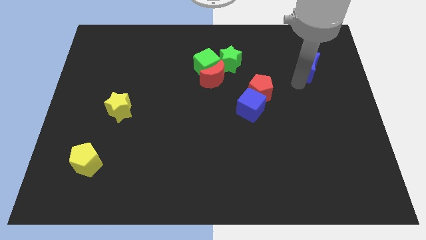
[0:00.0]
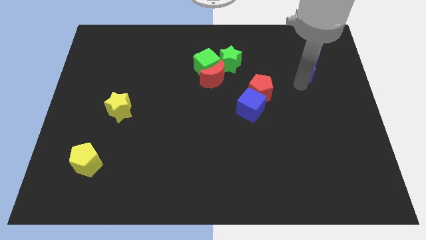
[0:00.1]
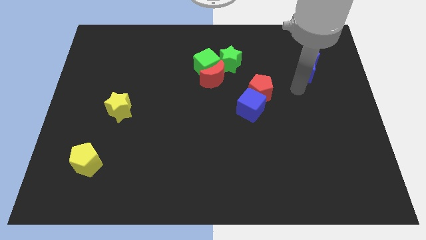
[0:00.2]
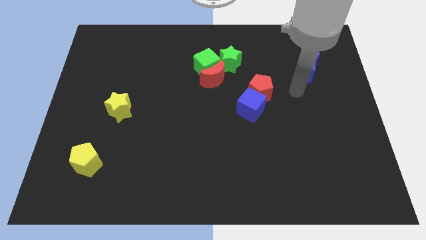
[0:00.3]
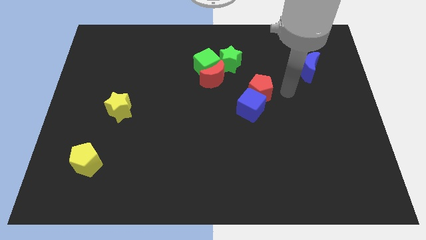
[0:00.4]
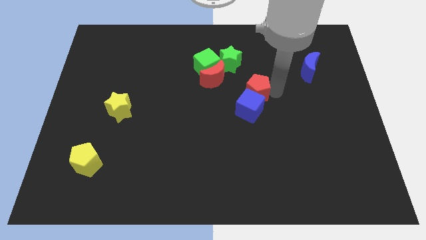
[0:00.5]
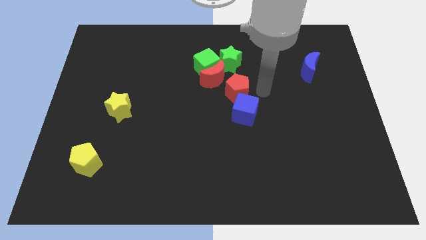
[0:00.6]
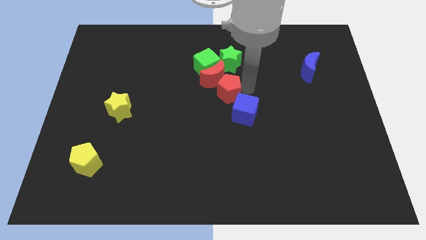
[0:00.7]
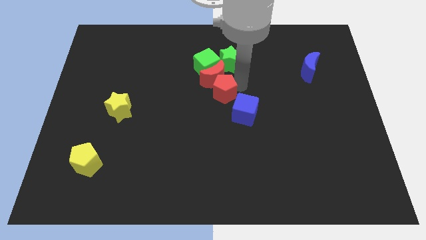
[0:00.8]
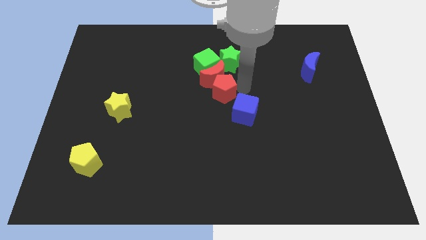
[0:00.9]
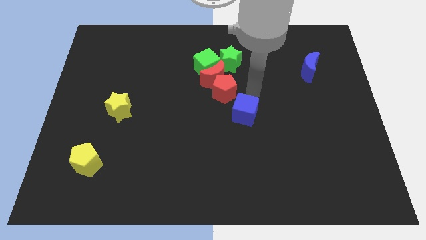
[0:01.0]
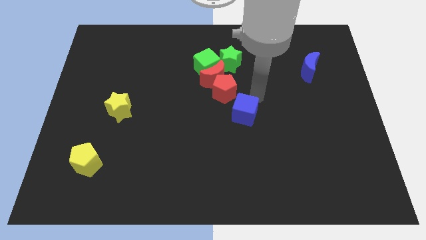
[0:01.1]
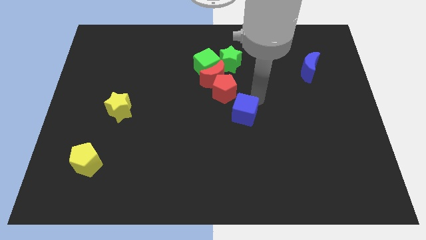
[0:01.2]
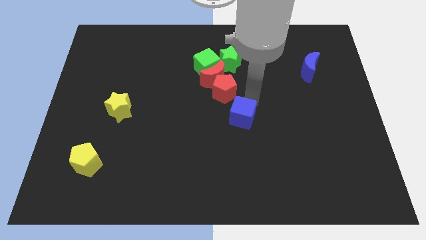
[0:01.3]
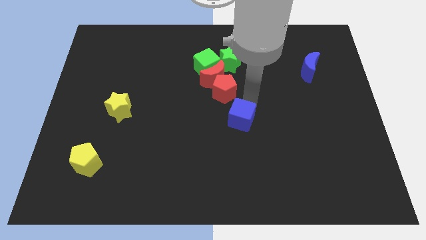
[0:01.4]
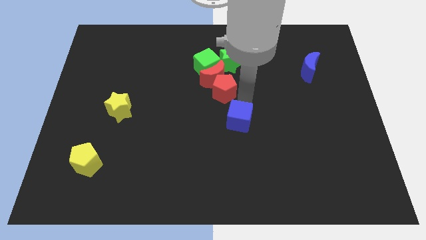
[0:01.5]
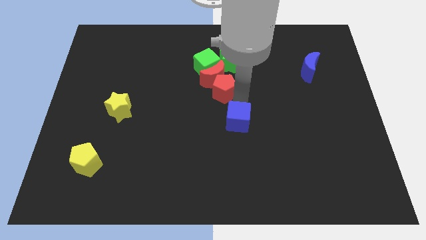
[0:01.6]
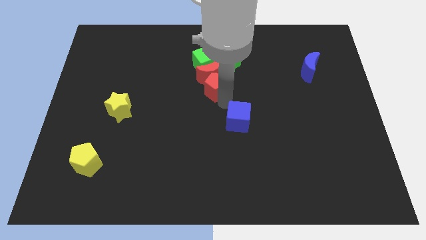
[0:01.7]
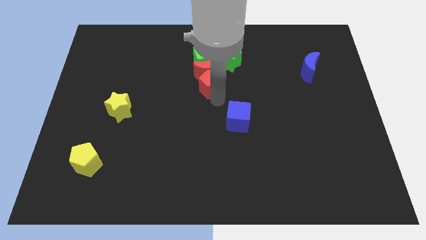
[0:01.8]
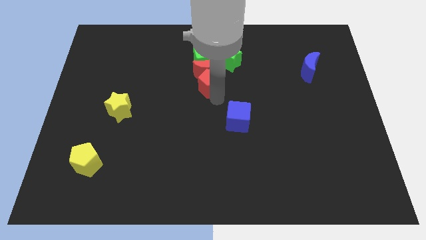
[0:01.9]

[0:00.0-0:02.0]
push the red pentagon close to the red moon

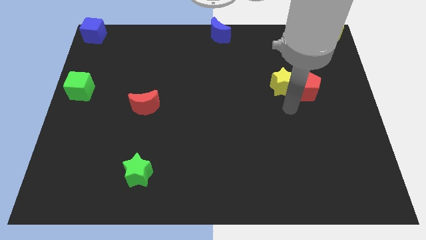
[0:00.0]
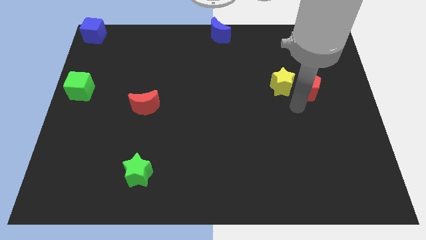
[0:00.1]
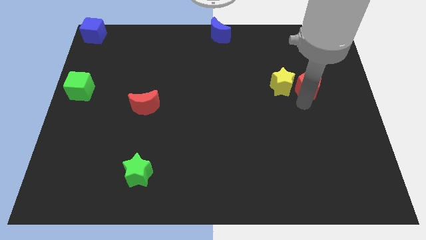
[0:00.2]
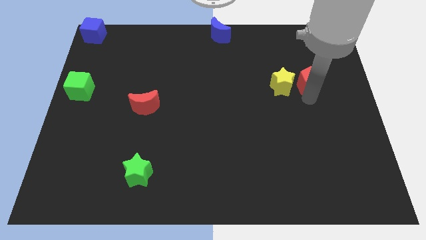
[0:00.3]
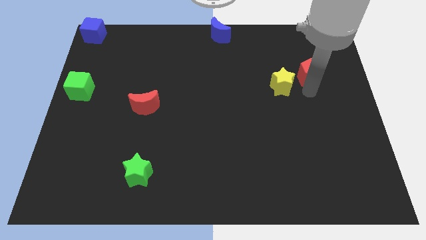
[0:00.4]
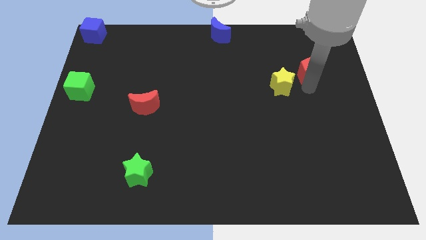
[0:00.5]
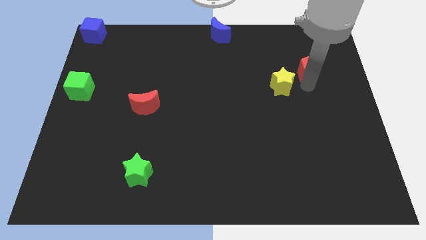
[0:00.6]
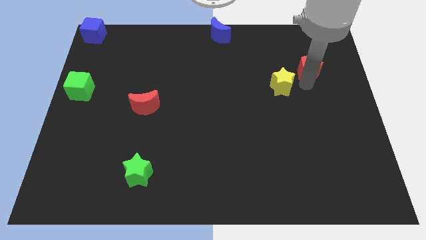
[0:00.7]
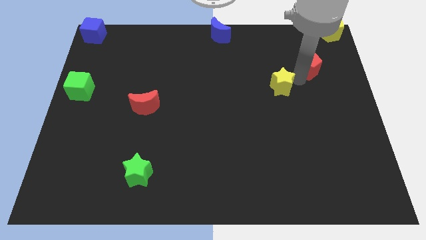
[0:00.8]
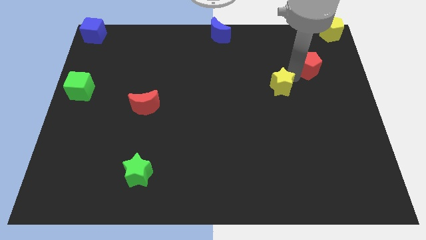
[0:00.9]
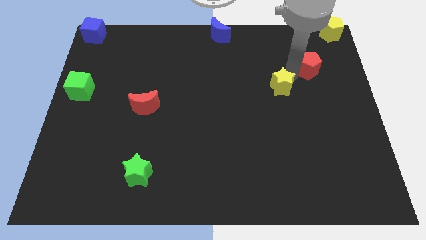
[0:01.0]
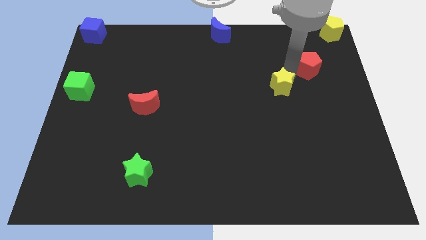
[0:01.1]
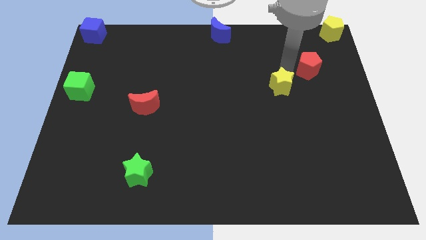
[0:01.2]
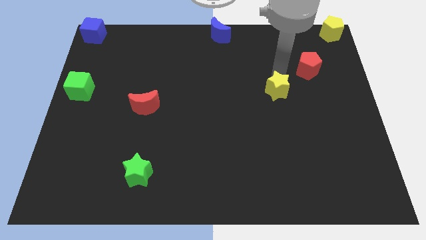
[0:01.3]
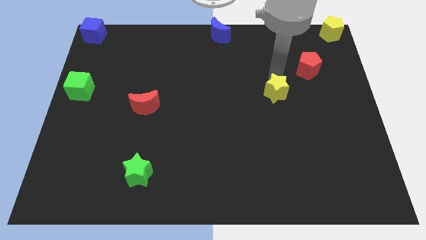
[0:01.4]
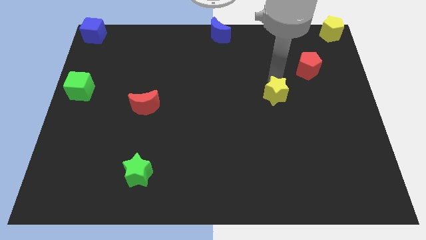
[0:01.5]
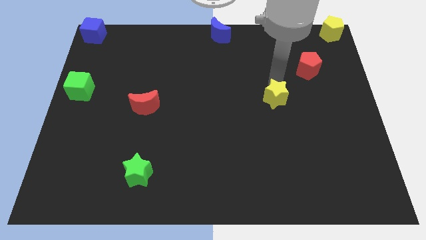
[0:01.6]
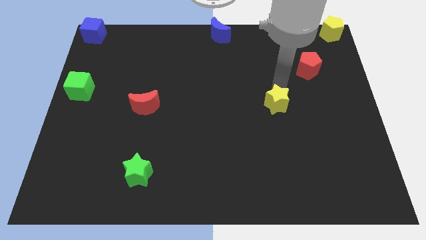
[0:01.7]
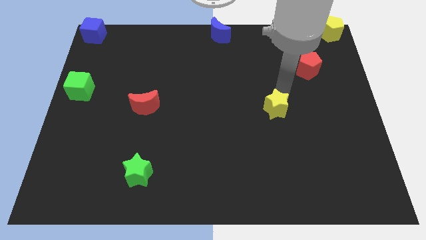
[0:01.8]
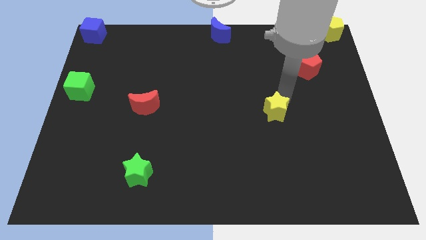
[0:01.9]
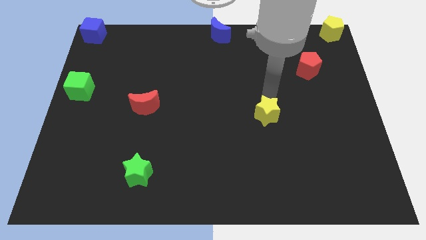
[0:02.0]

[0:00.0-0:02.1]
separate red pentagon and yellow star from each other

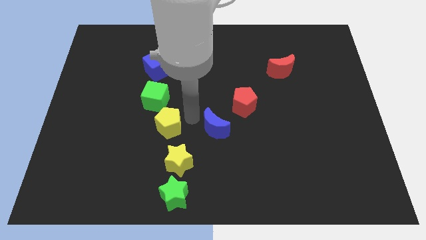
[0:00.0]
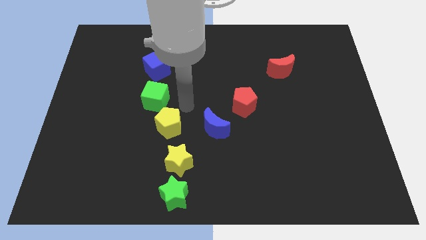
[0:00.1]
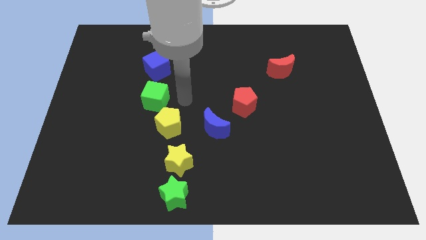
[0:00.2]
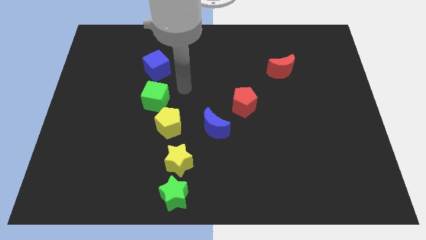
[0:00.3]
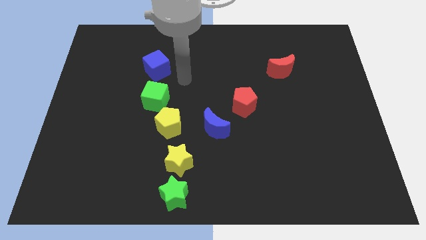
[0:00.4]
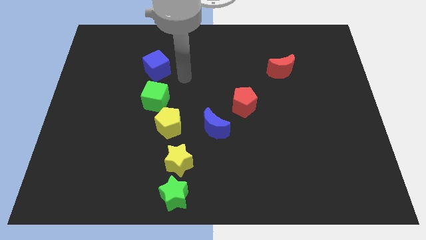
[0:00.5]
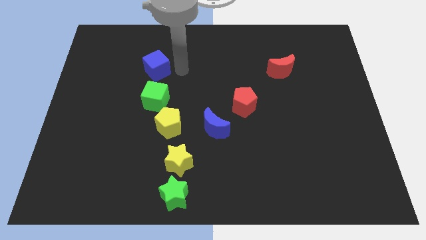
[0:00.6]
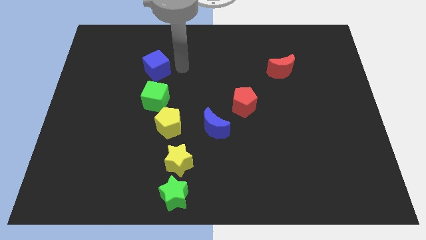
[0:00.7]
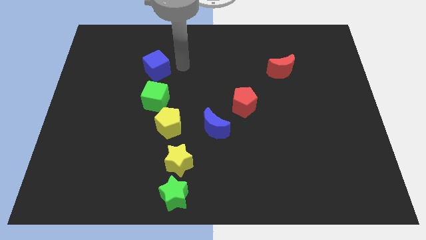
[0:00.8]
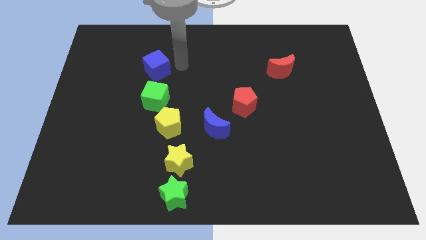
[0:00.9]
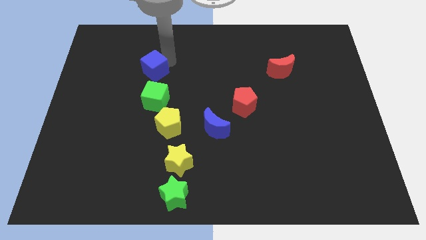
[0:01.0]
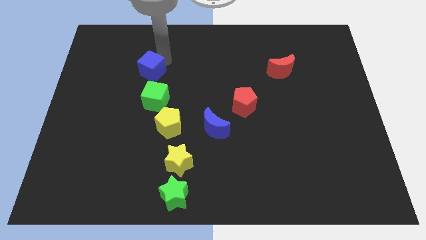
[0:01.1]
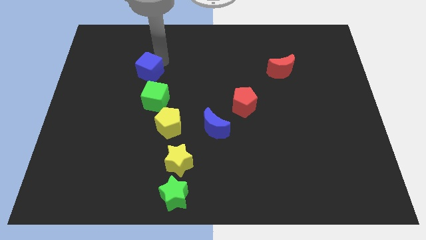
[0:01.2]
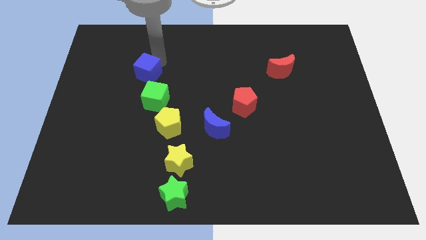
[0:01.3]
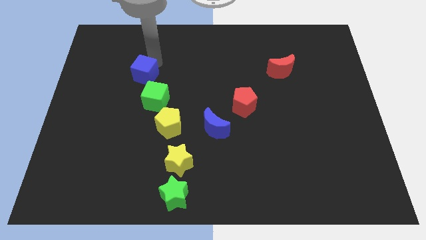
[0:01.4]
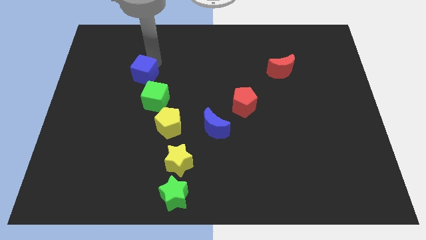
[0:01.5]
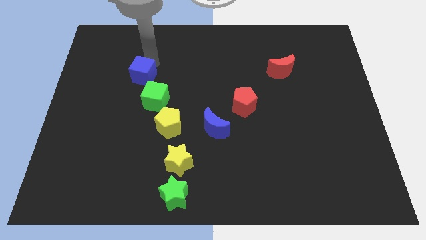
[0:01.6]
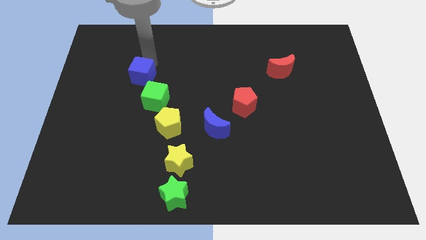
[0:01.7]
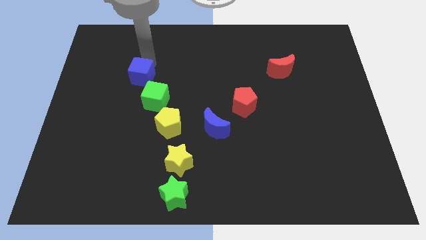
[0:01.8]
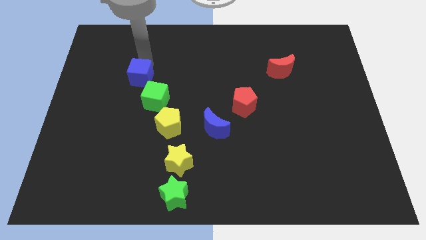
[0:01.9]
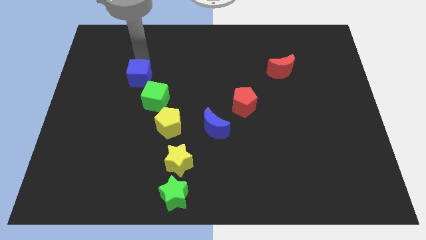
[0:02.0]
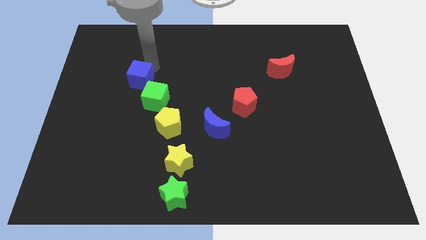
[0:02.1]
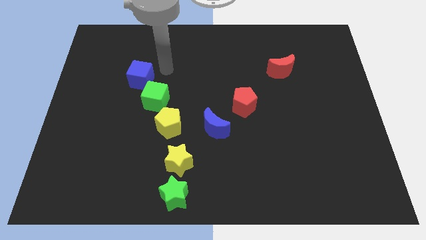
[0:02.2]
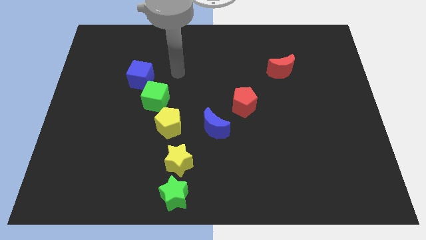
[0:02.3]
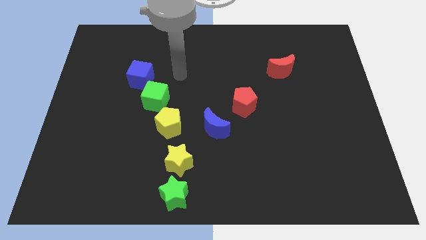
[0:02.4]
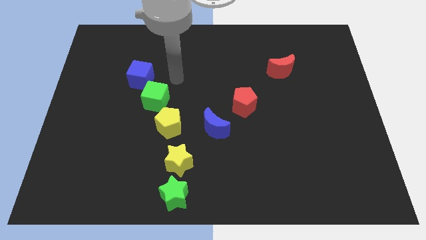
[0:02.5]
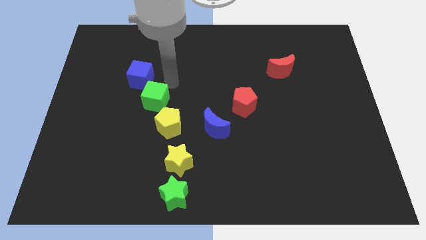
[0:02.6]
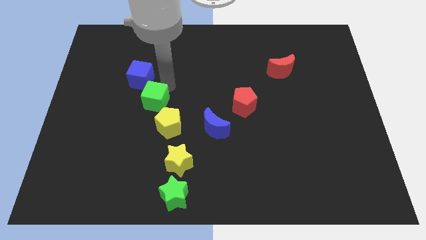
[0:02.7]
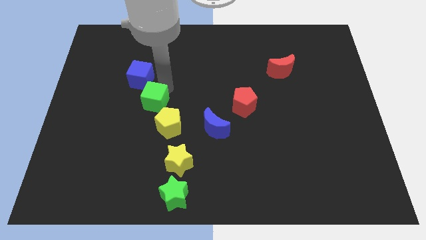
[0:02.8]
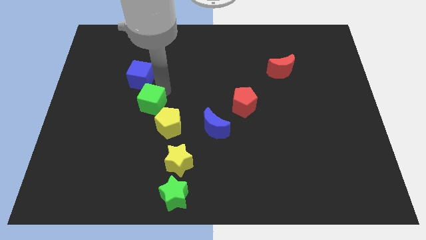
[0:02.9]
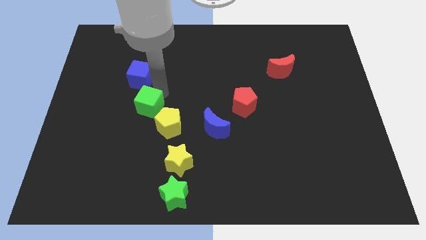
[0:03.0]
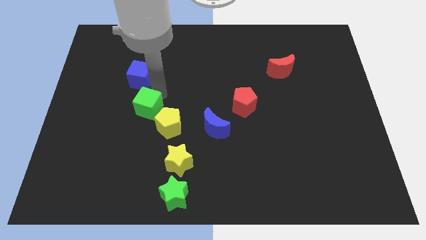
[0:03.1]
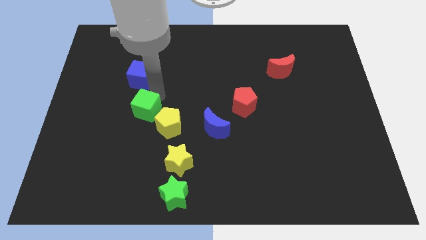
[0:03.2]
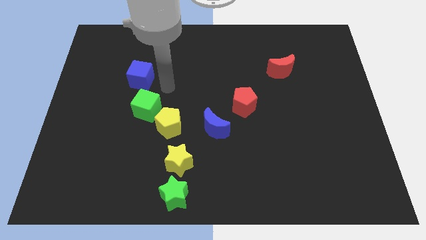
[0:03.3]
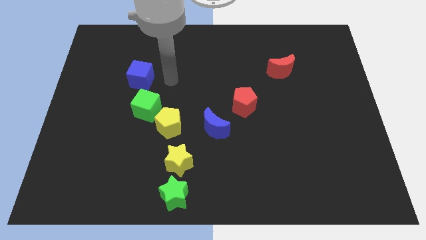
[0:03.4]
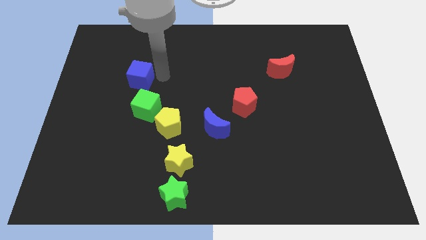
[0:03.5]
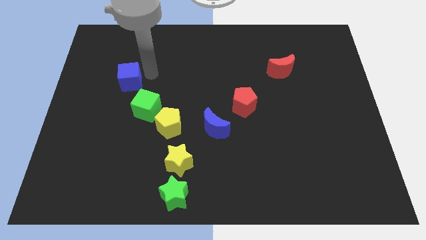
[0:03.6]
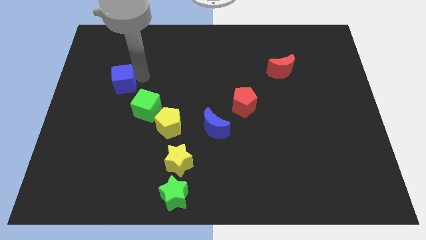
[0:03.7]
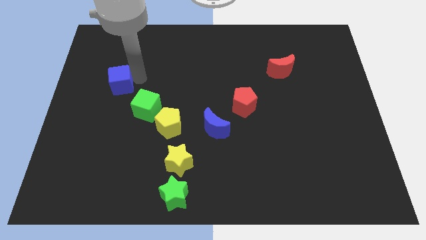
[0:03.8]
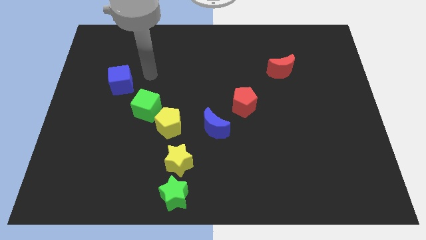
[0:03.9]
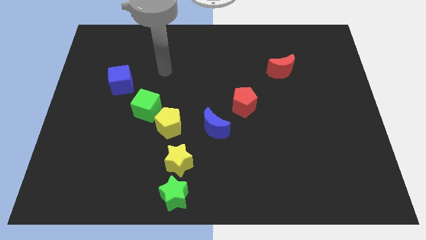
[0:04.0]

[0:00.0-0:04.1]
move the green cube and the blue cube slightly to the left

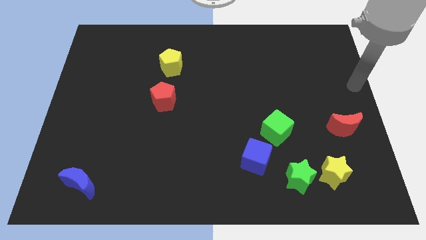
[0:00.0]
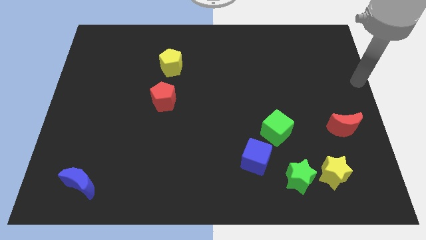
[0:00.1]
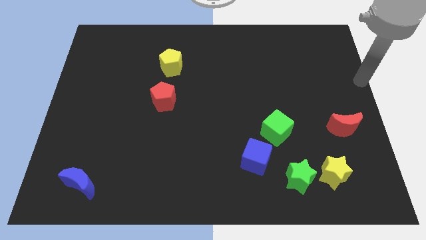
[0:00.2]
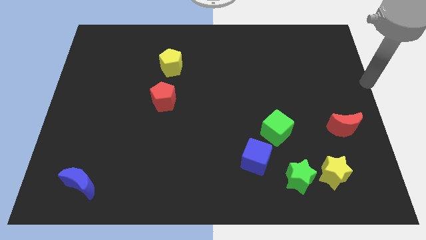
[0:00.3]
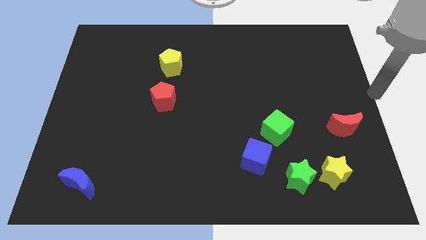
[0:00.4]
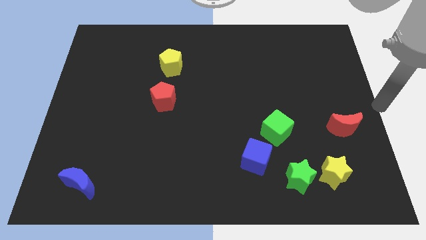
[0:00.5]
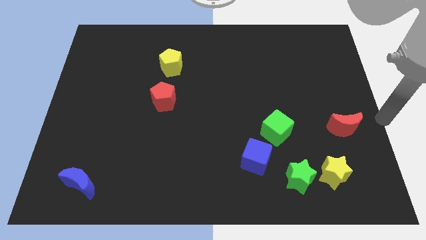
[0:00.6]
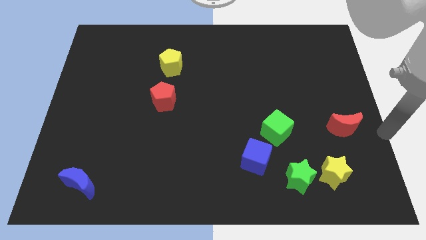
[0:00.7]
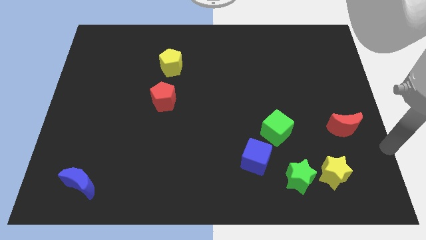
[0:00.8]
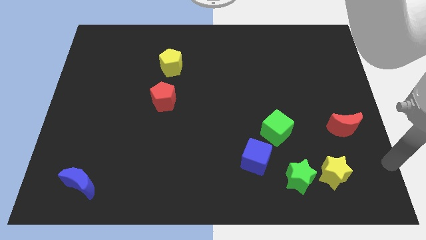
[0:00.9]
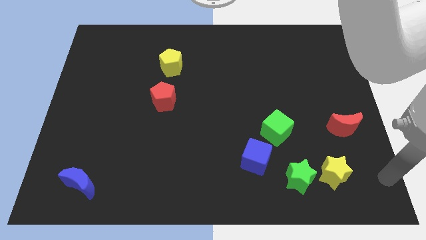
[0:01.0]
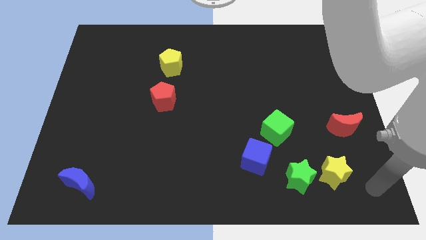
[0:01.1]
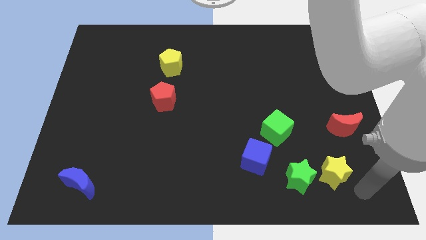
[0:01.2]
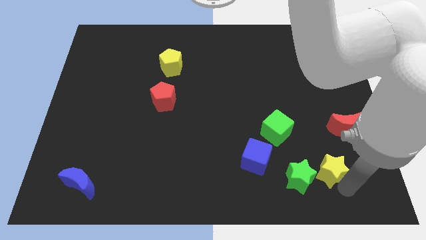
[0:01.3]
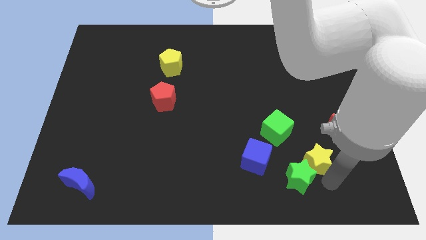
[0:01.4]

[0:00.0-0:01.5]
move yellow star diagonally above the green star
